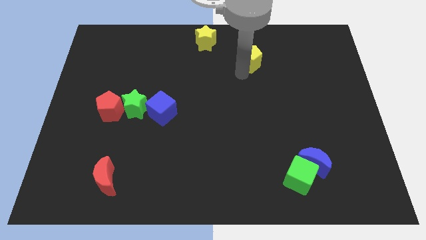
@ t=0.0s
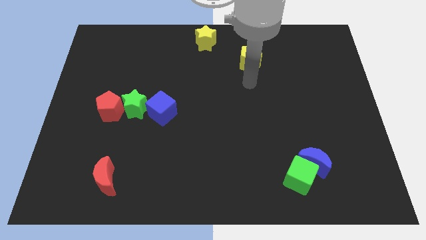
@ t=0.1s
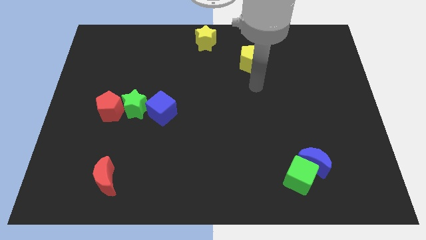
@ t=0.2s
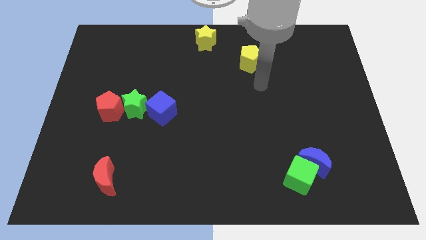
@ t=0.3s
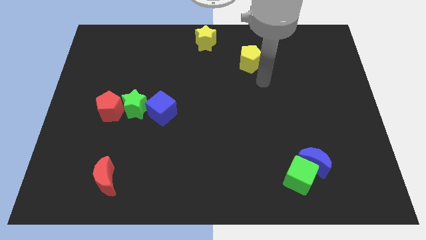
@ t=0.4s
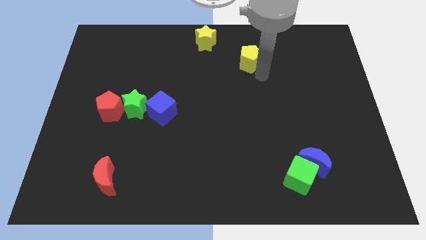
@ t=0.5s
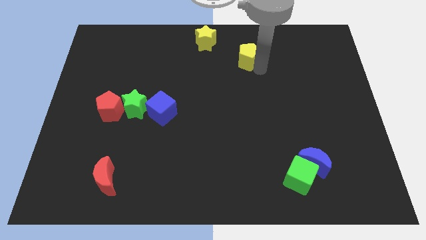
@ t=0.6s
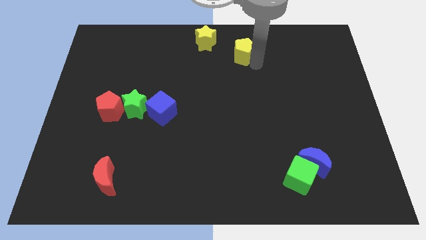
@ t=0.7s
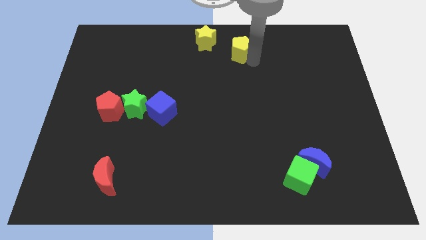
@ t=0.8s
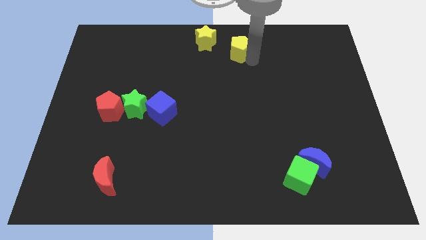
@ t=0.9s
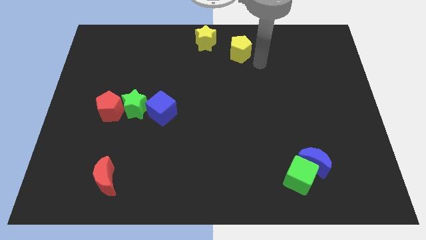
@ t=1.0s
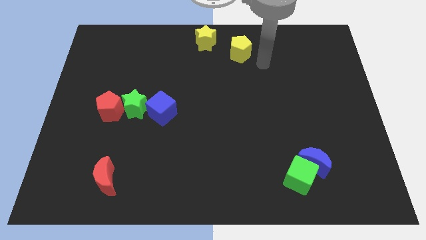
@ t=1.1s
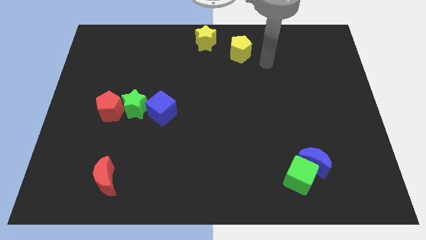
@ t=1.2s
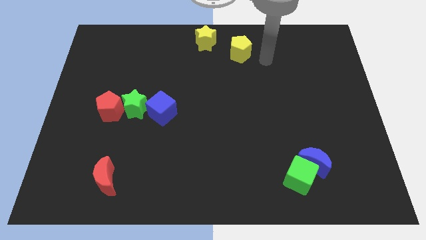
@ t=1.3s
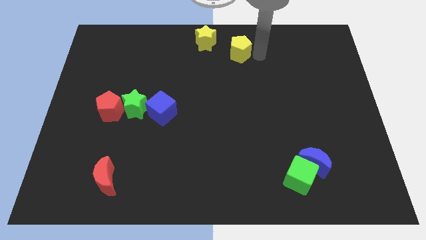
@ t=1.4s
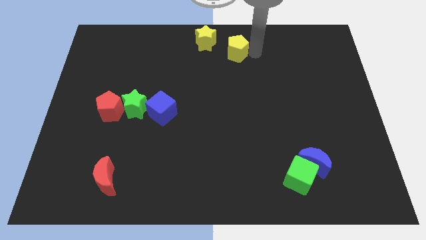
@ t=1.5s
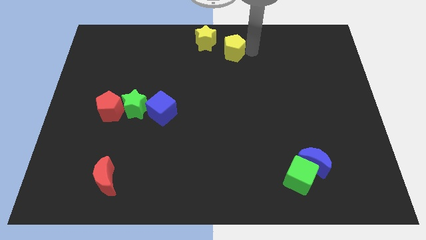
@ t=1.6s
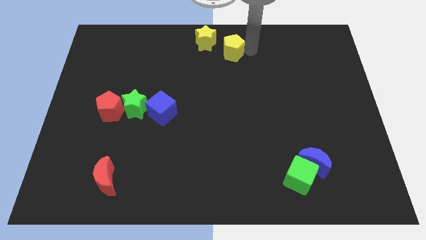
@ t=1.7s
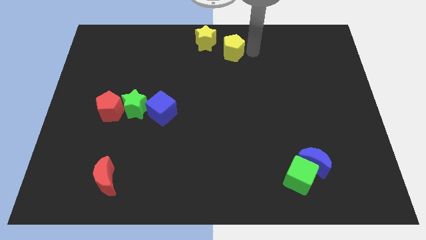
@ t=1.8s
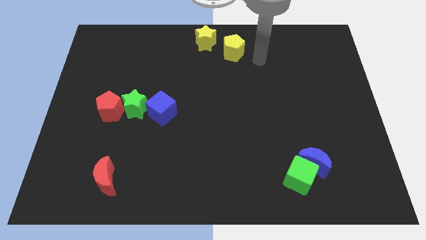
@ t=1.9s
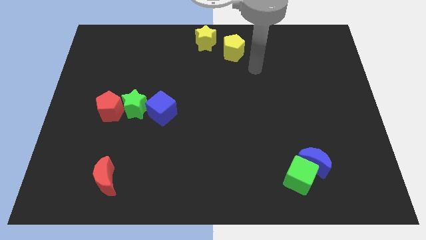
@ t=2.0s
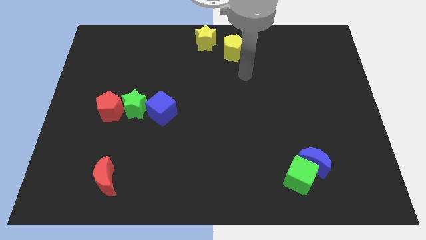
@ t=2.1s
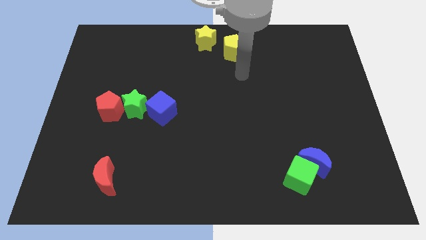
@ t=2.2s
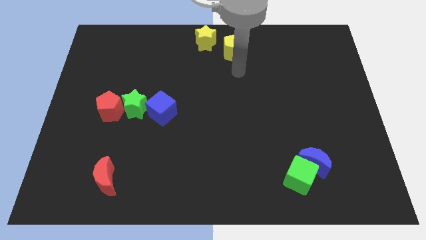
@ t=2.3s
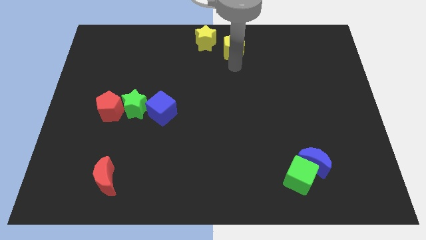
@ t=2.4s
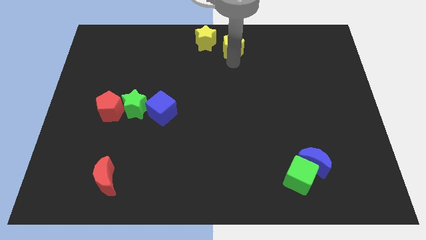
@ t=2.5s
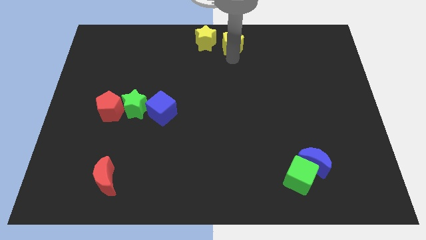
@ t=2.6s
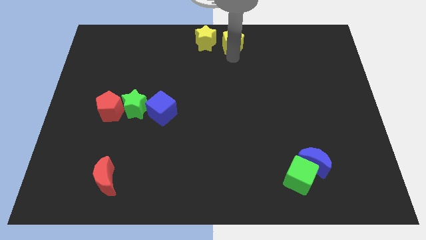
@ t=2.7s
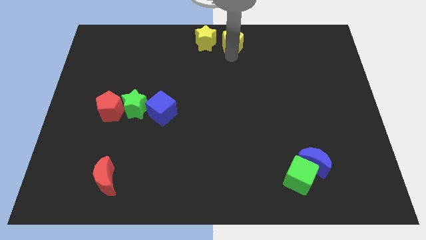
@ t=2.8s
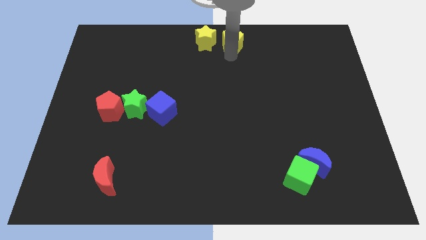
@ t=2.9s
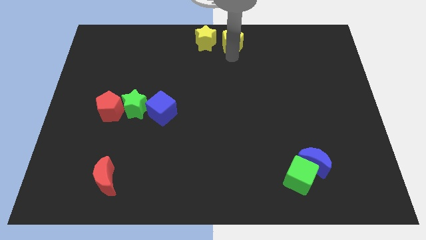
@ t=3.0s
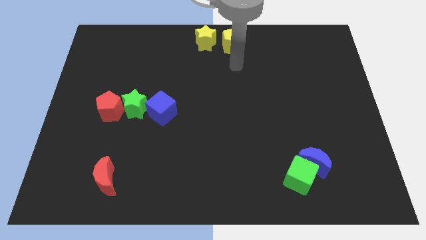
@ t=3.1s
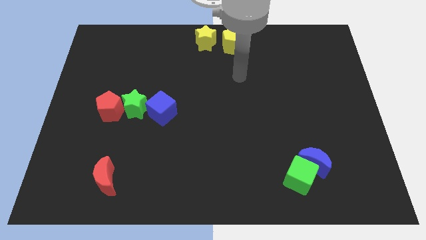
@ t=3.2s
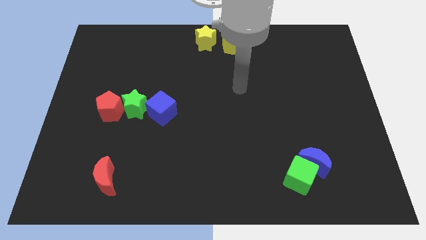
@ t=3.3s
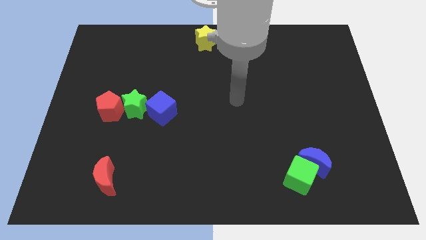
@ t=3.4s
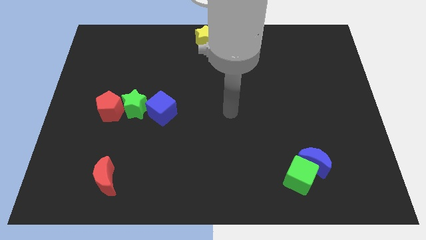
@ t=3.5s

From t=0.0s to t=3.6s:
place the yellow pentagon right to the yellow star

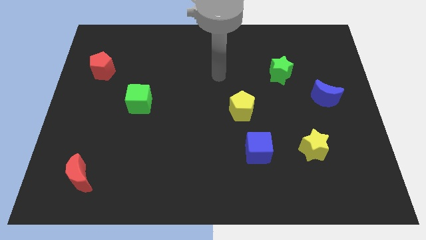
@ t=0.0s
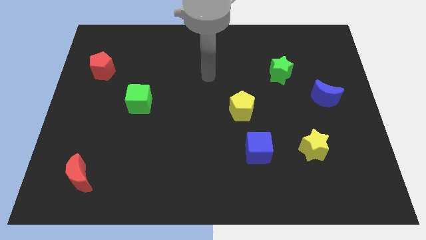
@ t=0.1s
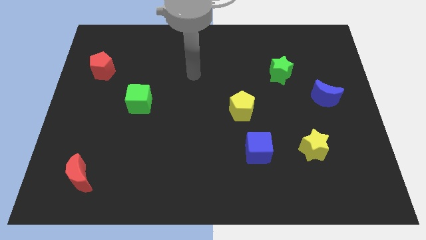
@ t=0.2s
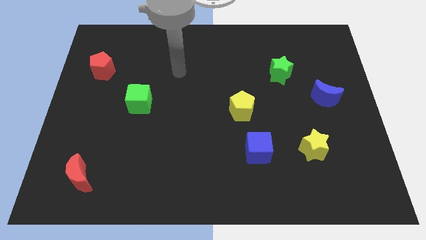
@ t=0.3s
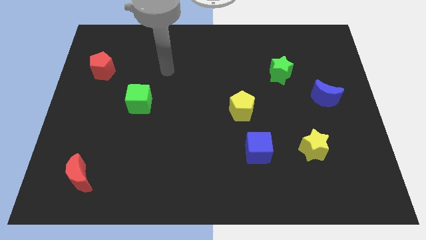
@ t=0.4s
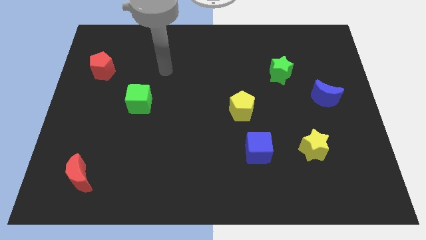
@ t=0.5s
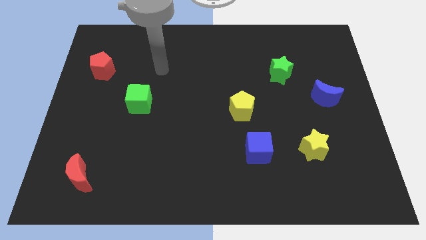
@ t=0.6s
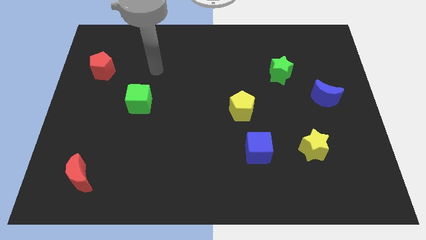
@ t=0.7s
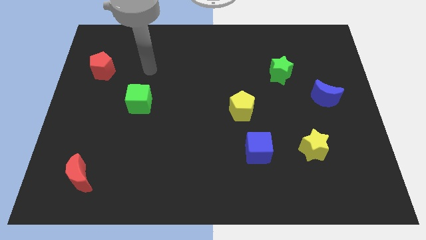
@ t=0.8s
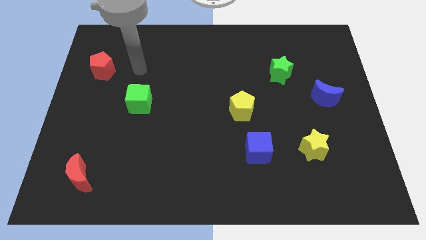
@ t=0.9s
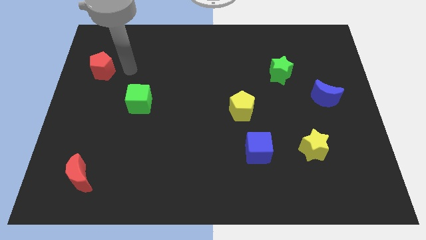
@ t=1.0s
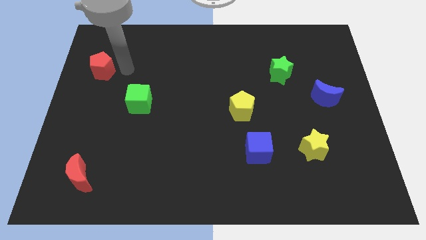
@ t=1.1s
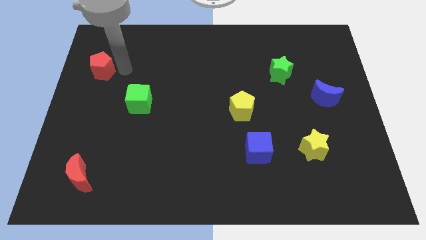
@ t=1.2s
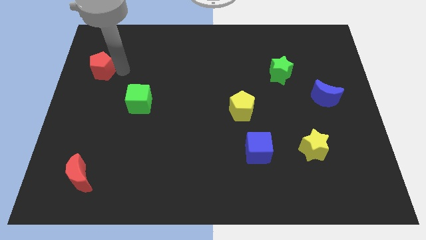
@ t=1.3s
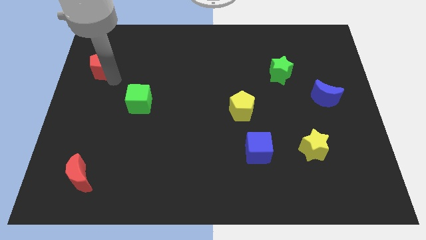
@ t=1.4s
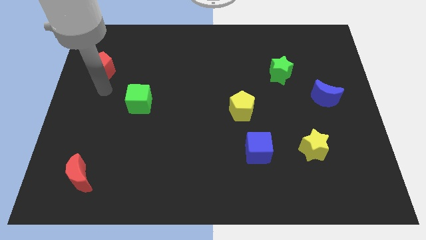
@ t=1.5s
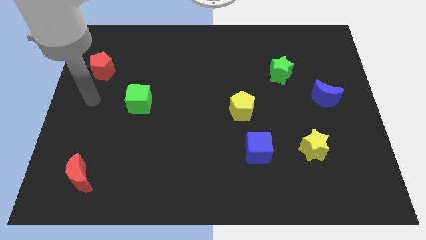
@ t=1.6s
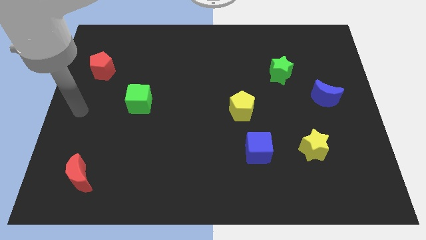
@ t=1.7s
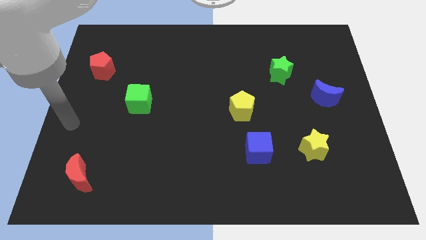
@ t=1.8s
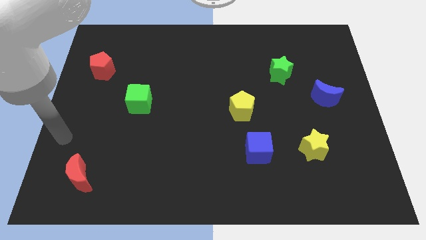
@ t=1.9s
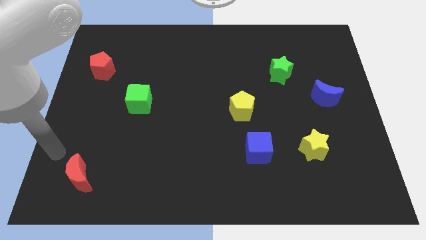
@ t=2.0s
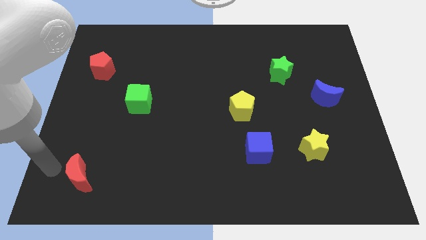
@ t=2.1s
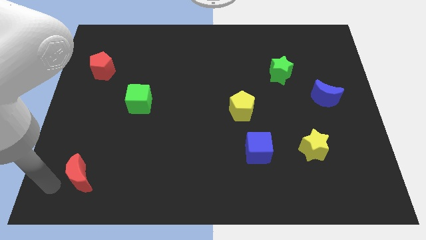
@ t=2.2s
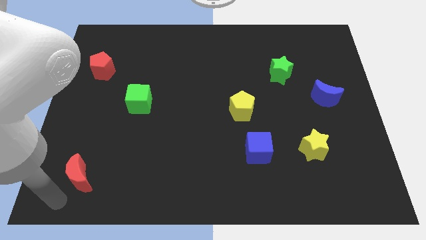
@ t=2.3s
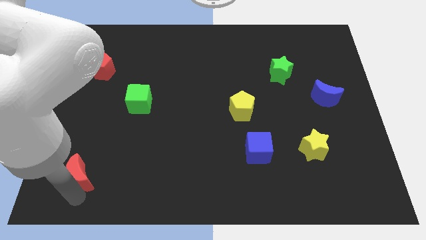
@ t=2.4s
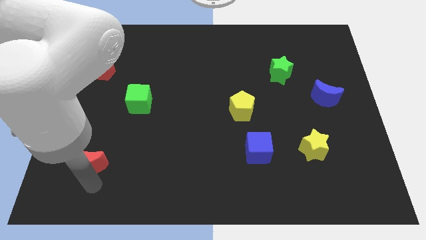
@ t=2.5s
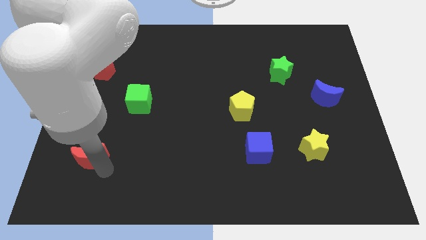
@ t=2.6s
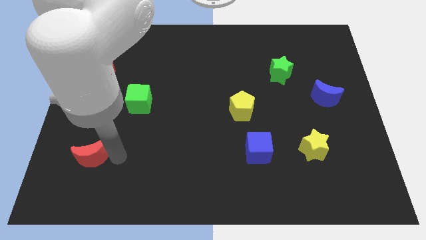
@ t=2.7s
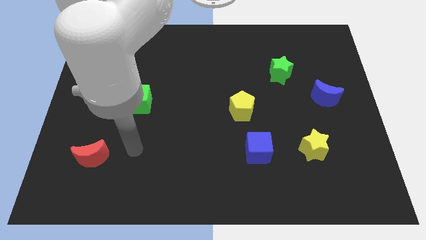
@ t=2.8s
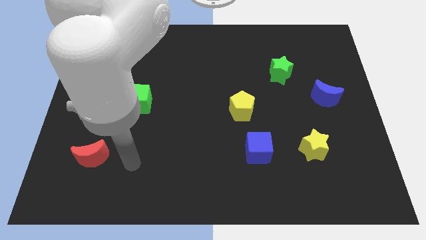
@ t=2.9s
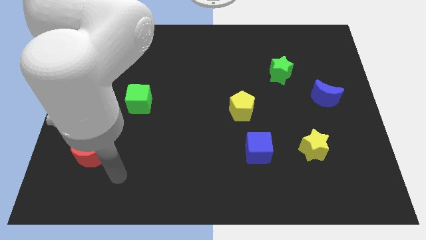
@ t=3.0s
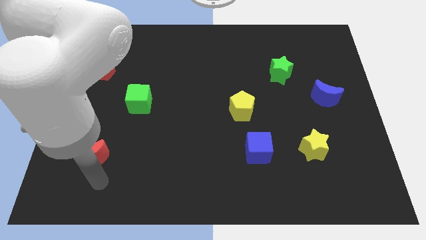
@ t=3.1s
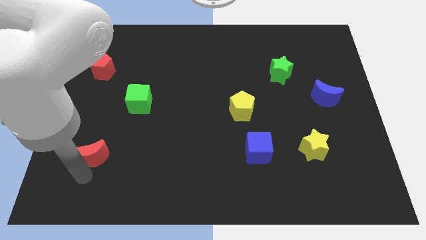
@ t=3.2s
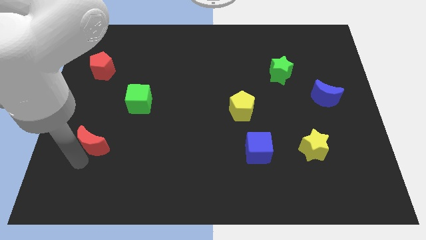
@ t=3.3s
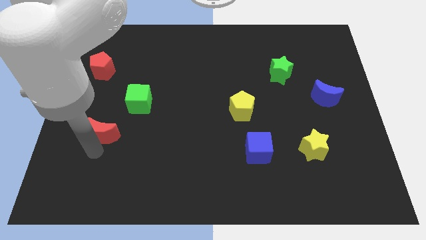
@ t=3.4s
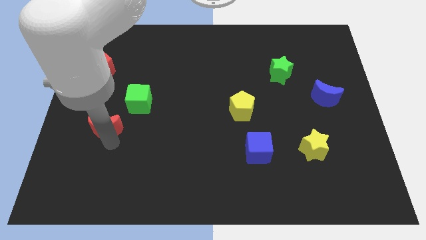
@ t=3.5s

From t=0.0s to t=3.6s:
move the red moon towards the bottom left side of the green cube

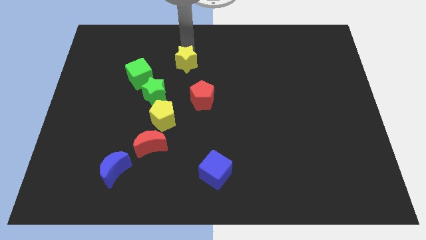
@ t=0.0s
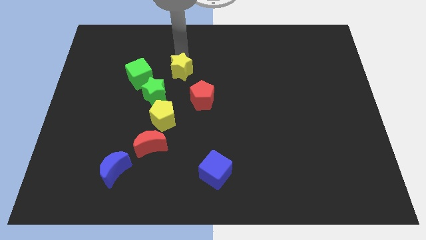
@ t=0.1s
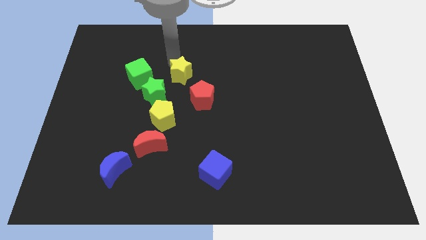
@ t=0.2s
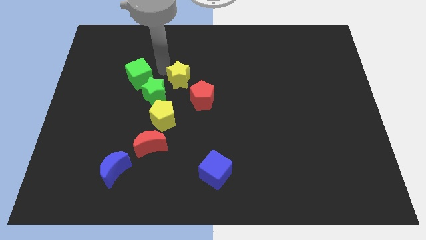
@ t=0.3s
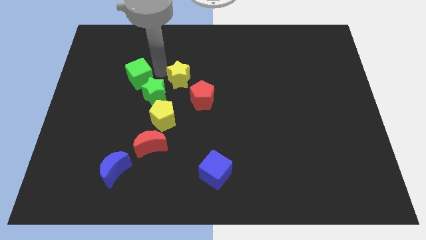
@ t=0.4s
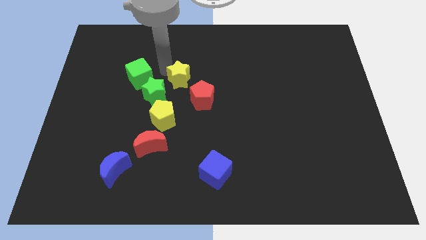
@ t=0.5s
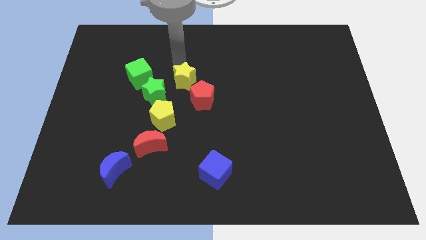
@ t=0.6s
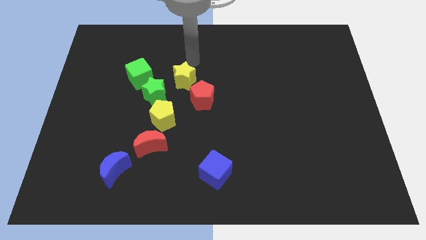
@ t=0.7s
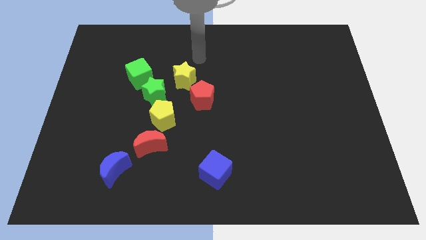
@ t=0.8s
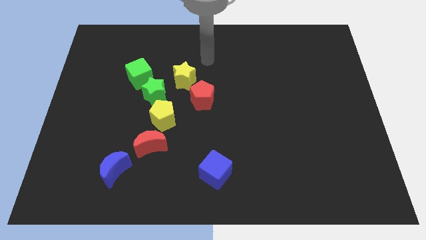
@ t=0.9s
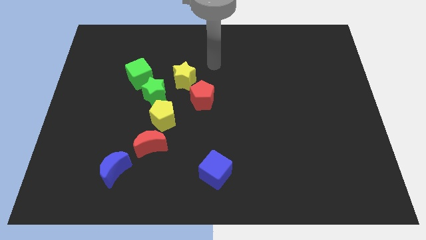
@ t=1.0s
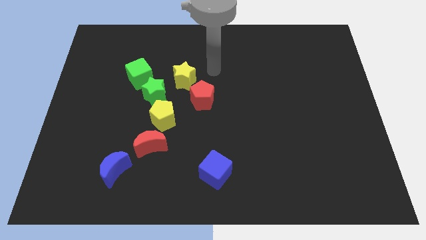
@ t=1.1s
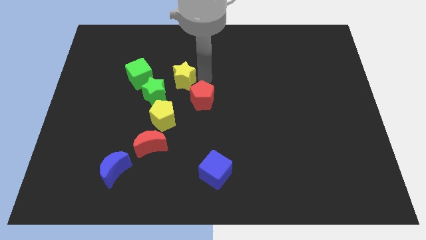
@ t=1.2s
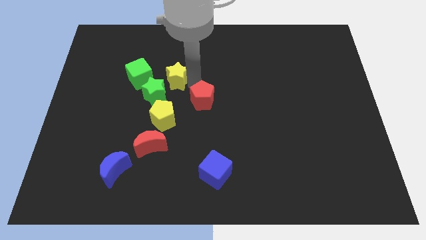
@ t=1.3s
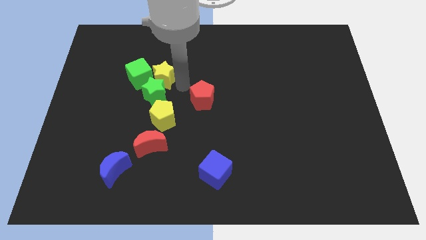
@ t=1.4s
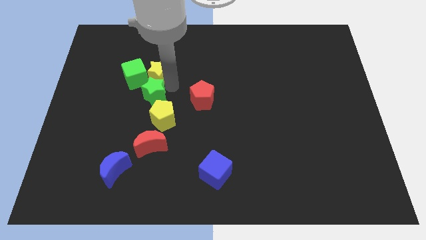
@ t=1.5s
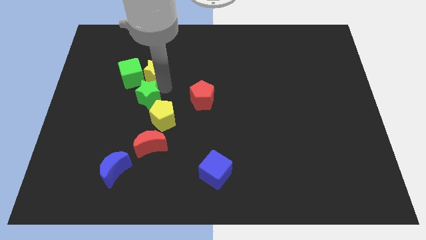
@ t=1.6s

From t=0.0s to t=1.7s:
slide the yellow star into the right side of the green cube
